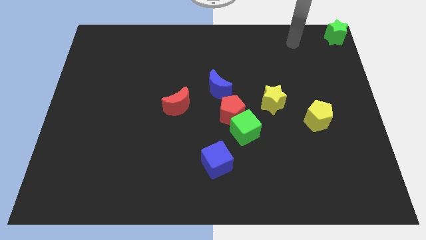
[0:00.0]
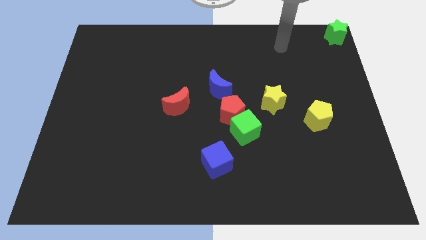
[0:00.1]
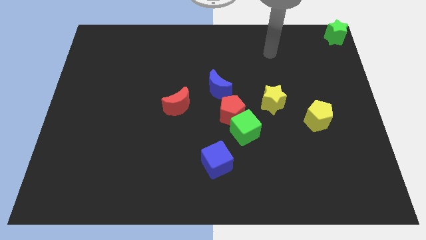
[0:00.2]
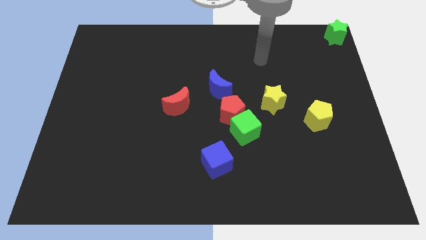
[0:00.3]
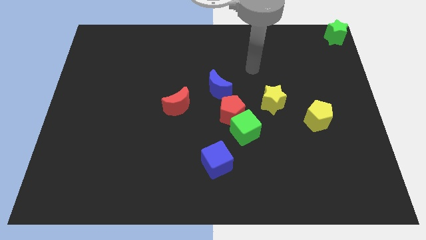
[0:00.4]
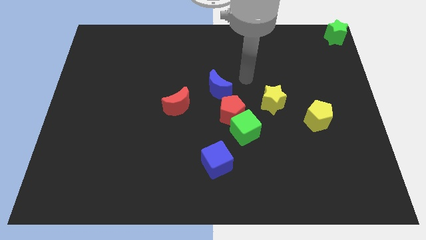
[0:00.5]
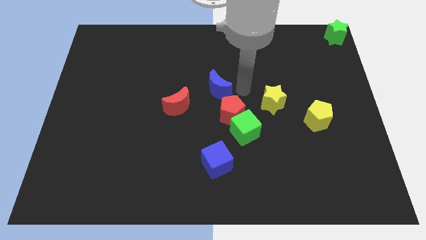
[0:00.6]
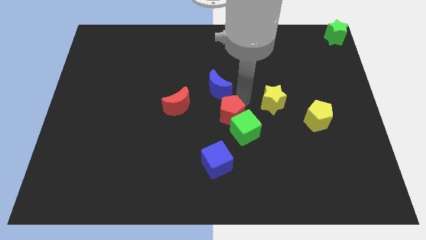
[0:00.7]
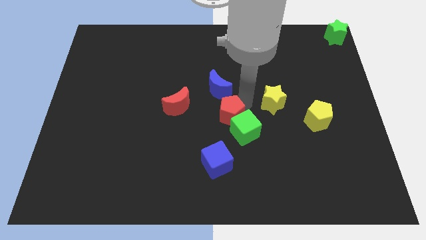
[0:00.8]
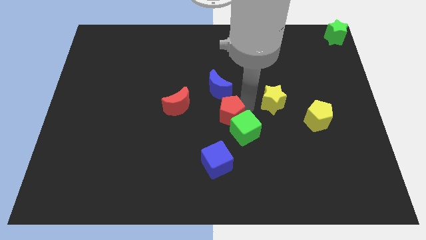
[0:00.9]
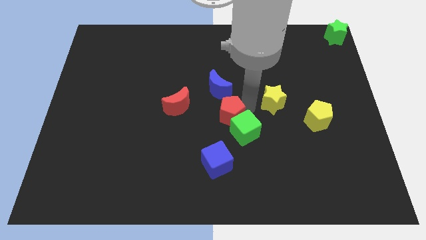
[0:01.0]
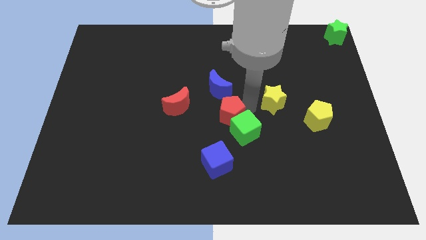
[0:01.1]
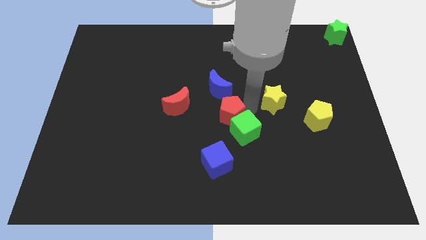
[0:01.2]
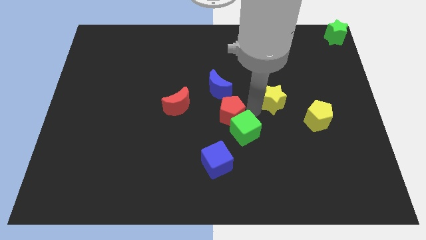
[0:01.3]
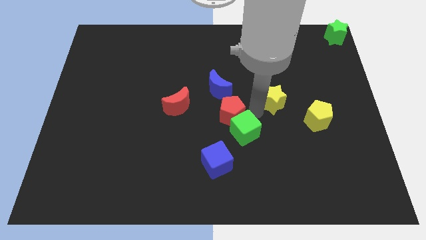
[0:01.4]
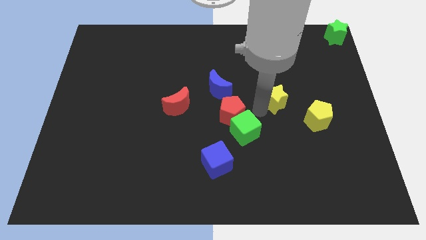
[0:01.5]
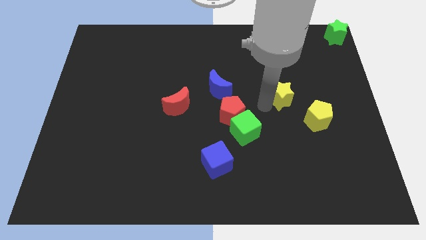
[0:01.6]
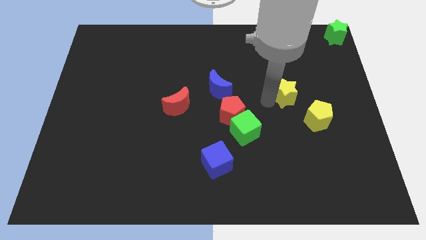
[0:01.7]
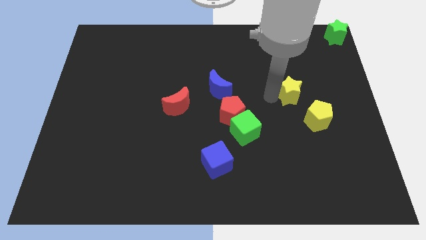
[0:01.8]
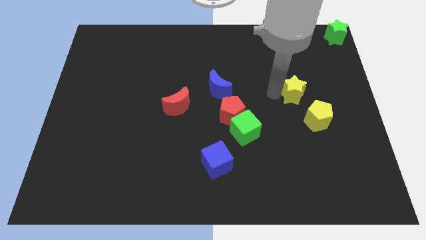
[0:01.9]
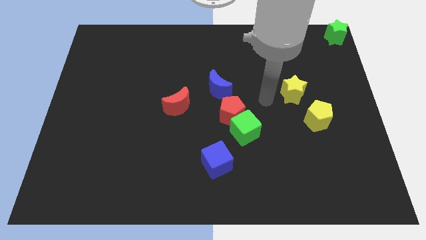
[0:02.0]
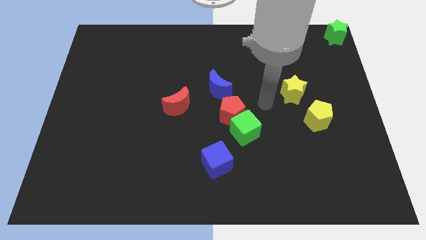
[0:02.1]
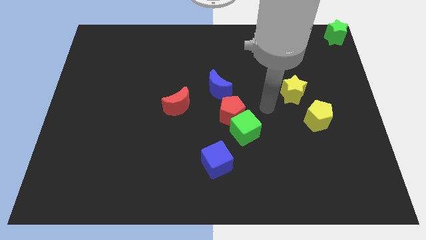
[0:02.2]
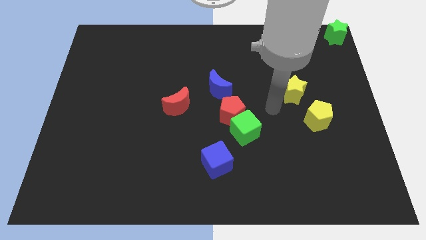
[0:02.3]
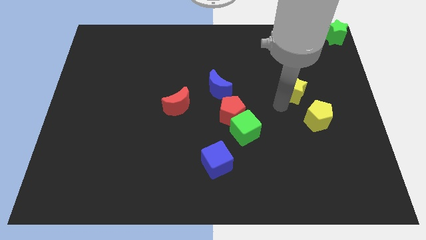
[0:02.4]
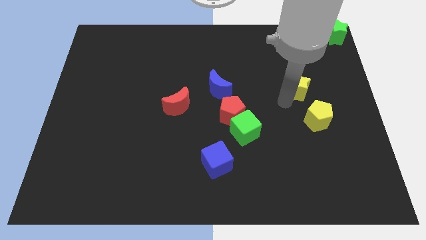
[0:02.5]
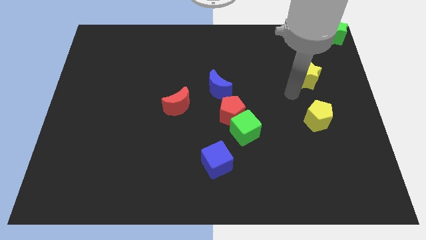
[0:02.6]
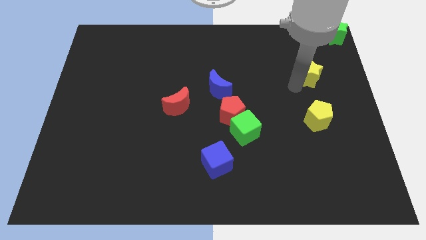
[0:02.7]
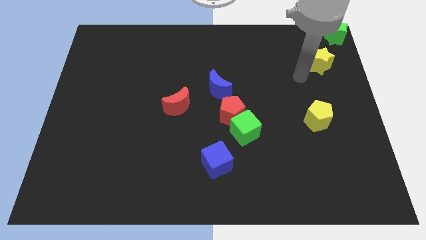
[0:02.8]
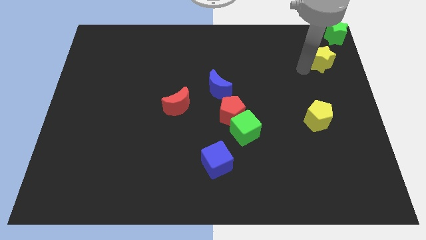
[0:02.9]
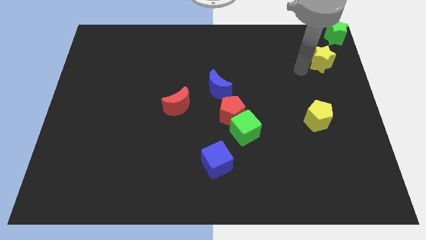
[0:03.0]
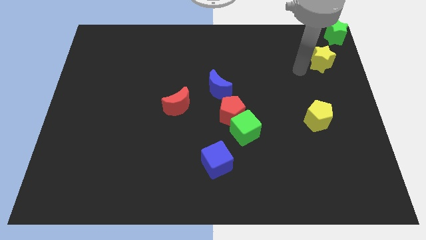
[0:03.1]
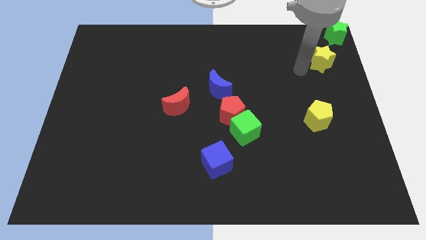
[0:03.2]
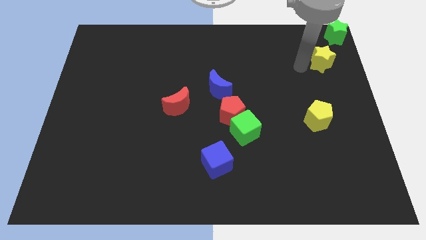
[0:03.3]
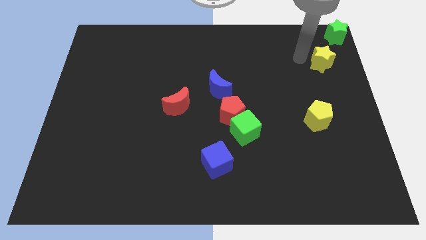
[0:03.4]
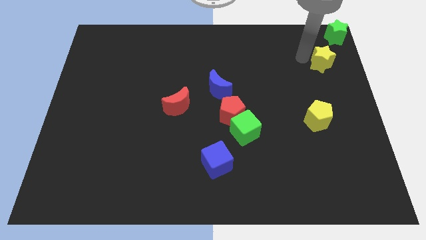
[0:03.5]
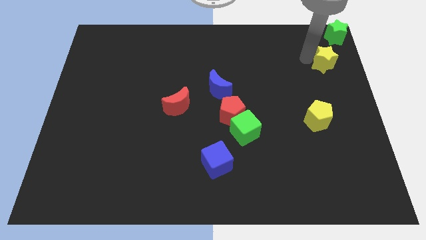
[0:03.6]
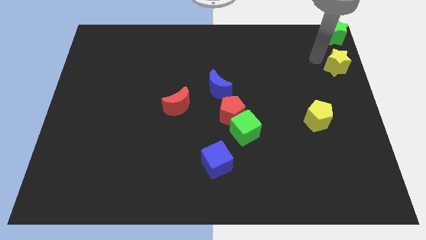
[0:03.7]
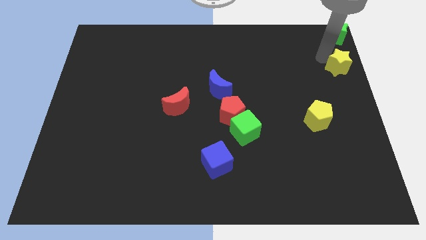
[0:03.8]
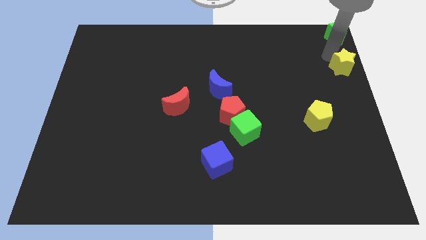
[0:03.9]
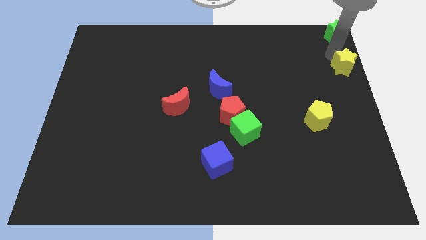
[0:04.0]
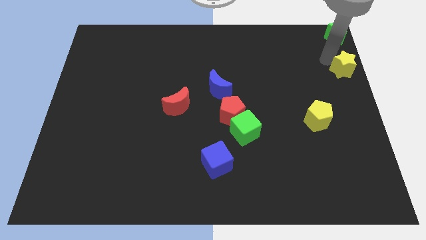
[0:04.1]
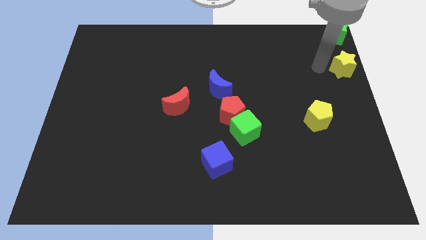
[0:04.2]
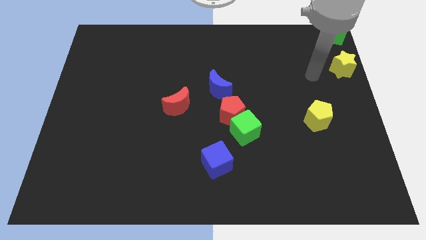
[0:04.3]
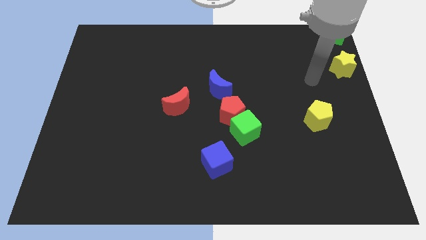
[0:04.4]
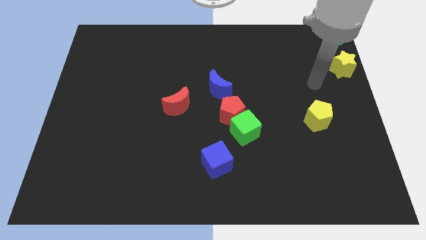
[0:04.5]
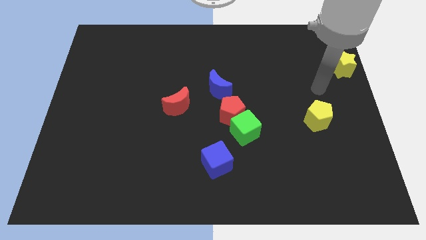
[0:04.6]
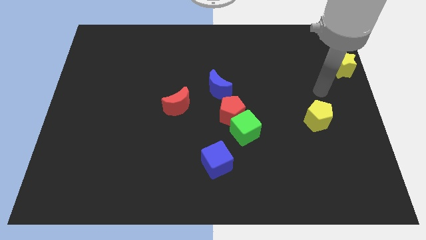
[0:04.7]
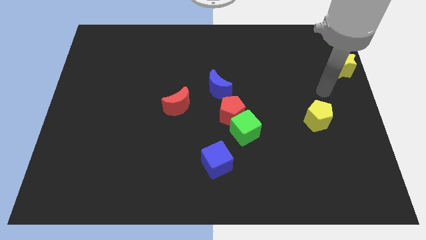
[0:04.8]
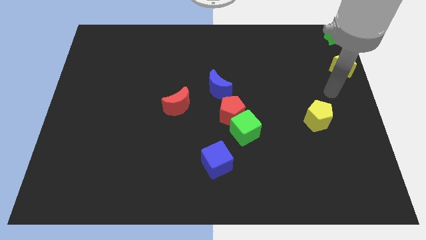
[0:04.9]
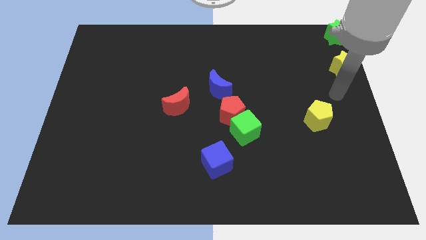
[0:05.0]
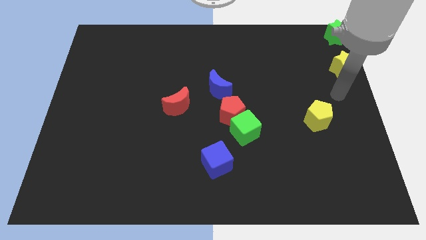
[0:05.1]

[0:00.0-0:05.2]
put the yellow star vertically below the bottom side of the green star

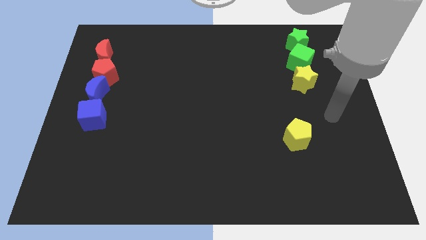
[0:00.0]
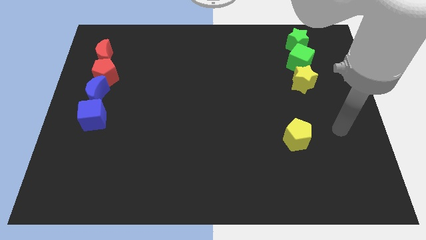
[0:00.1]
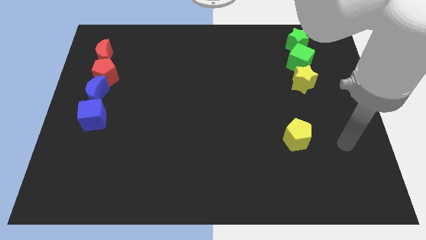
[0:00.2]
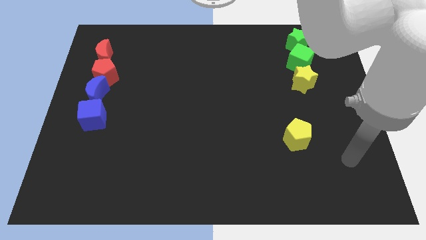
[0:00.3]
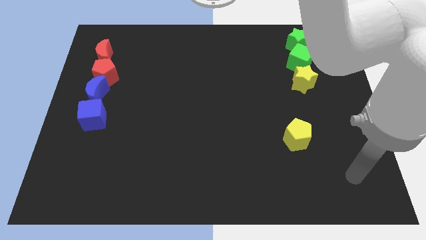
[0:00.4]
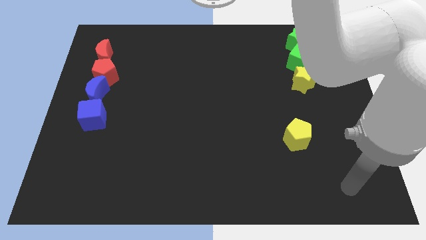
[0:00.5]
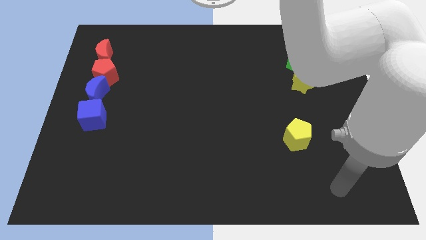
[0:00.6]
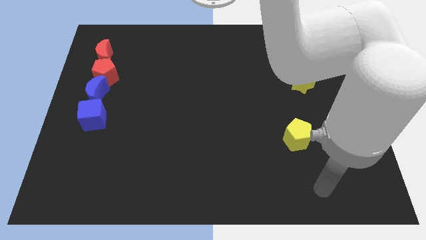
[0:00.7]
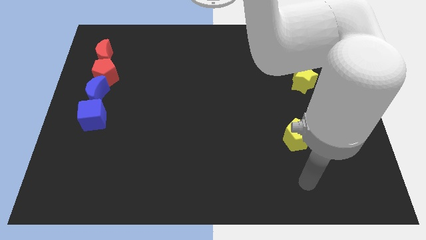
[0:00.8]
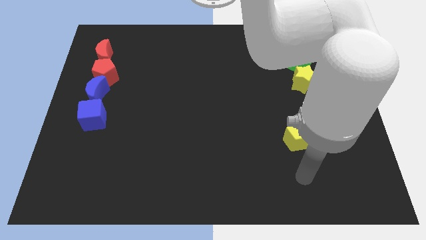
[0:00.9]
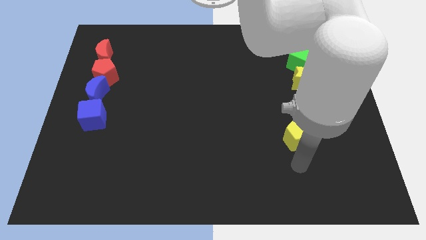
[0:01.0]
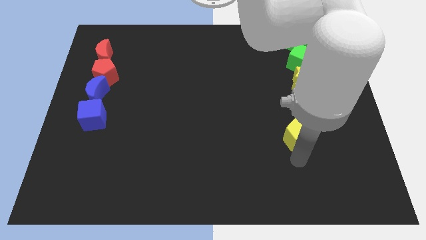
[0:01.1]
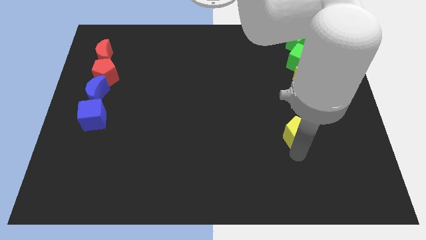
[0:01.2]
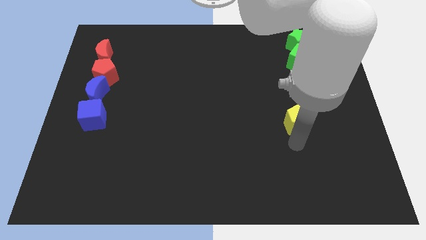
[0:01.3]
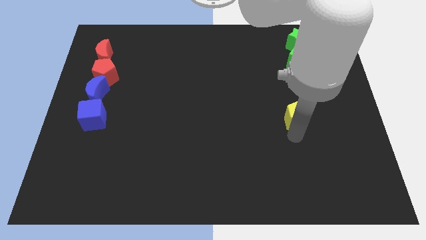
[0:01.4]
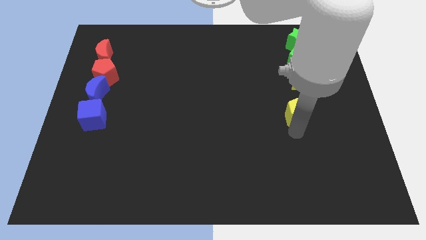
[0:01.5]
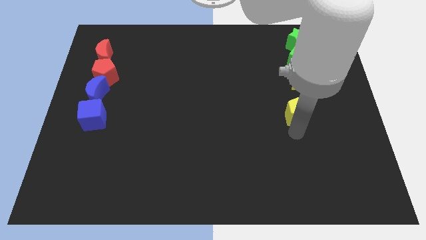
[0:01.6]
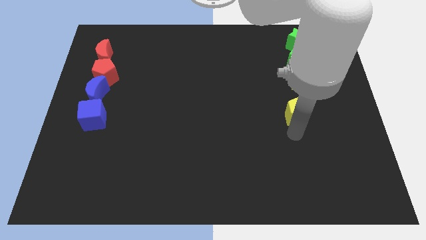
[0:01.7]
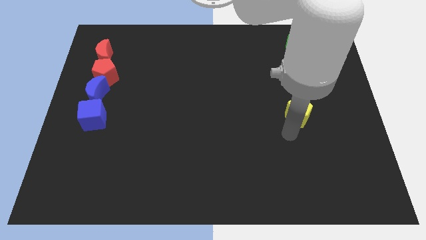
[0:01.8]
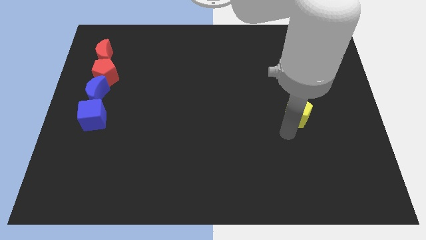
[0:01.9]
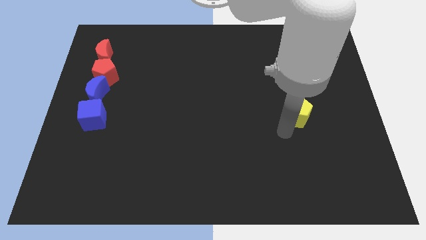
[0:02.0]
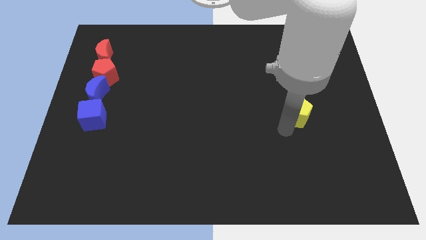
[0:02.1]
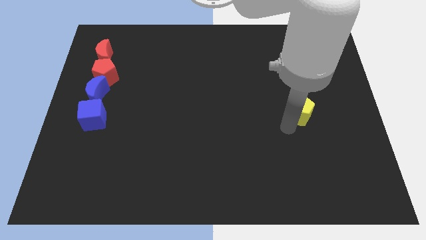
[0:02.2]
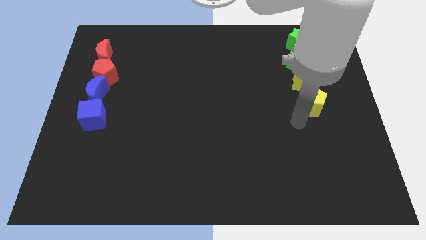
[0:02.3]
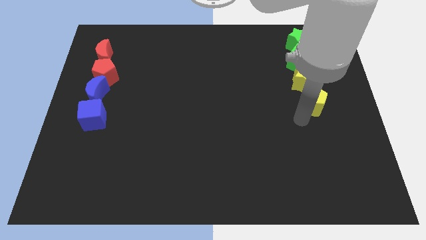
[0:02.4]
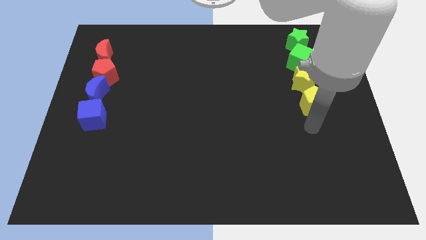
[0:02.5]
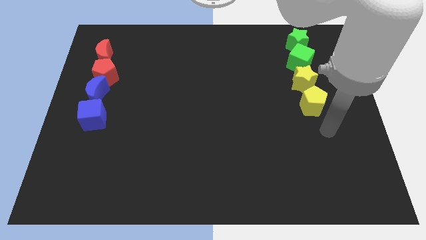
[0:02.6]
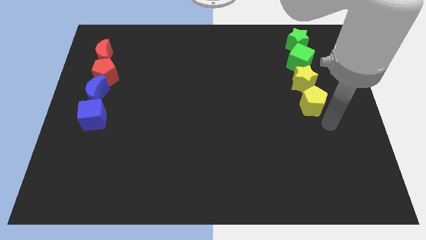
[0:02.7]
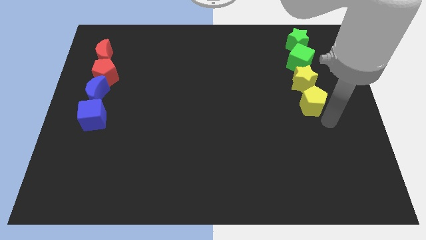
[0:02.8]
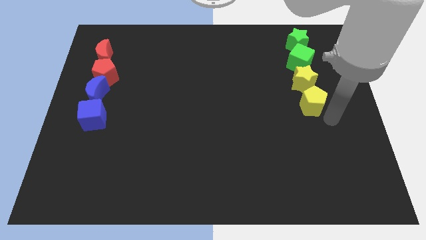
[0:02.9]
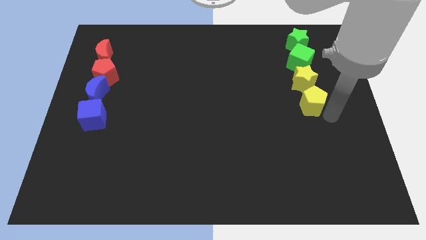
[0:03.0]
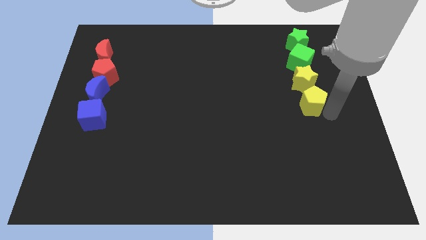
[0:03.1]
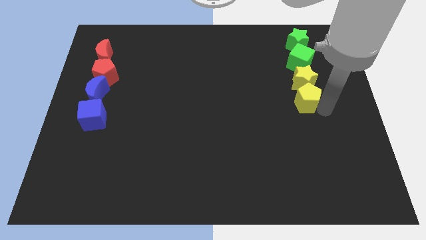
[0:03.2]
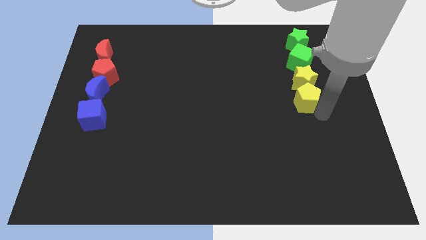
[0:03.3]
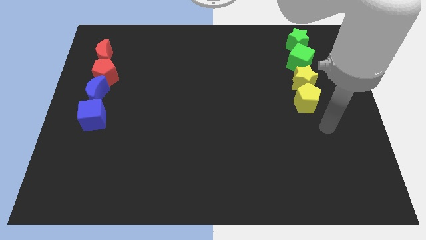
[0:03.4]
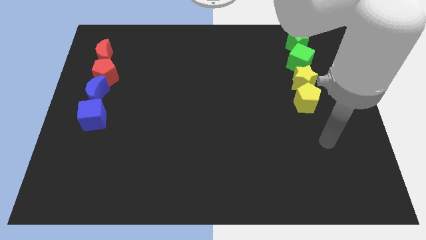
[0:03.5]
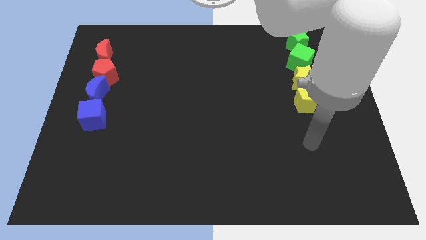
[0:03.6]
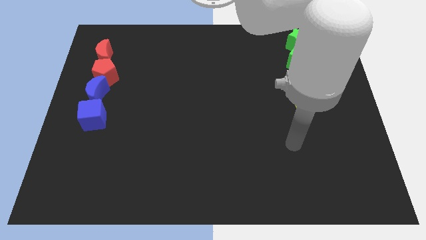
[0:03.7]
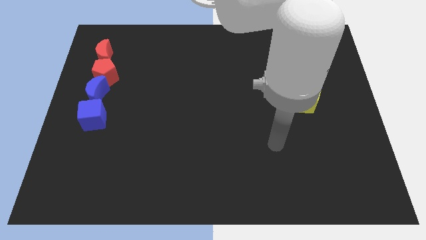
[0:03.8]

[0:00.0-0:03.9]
move the yellow pentagon to the bottom of the yellow star
